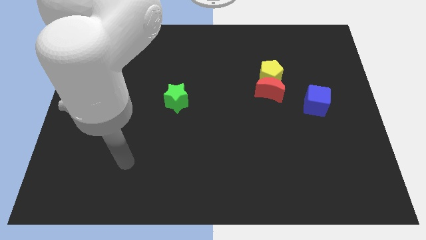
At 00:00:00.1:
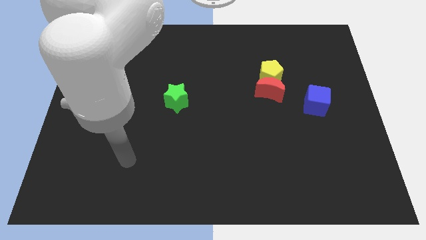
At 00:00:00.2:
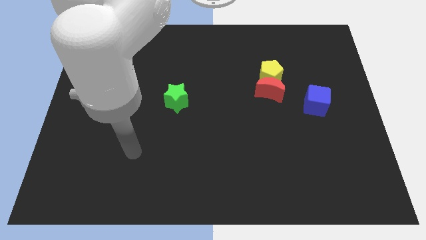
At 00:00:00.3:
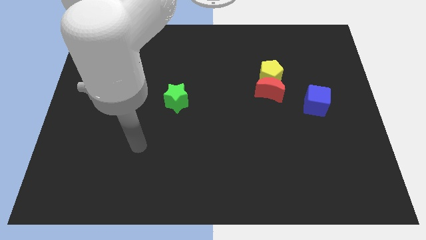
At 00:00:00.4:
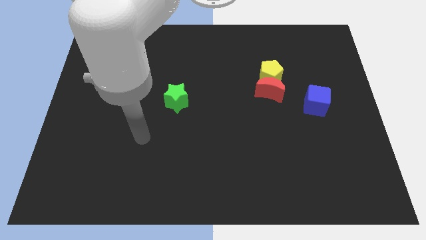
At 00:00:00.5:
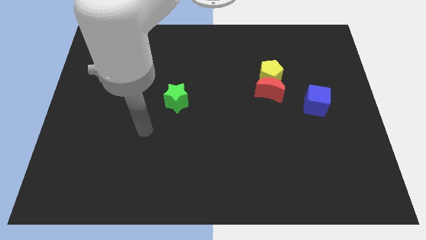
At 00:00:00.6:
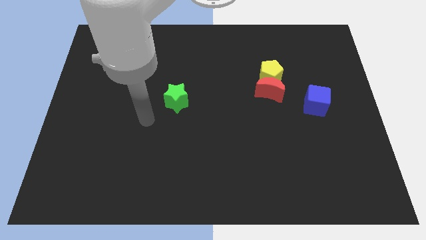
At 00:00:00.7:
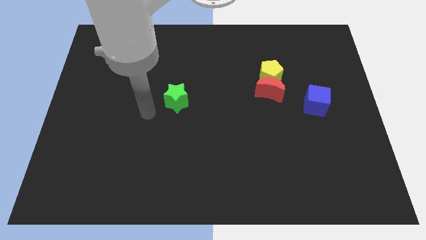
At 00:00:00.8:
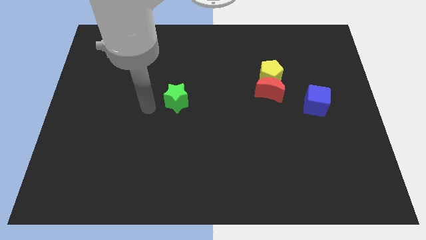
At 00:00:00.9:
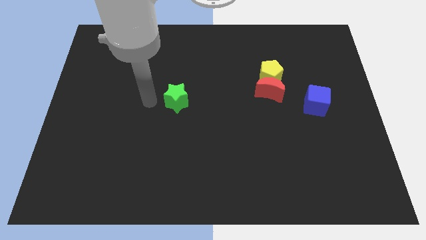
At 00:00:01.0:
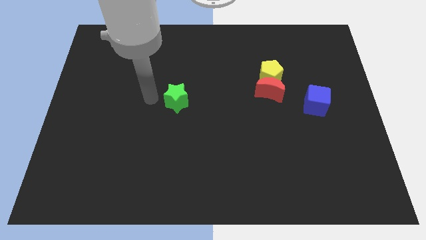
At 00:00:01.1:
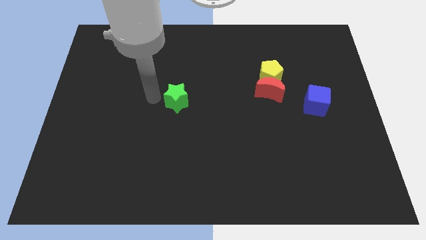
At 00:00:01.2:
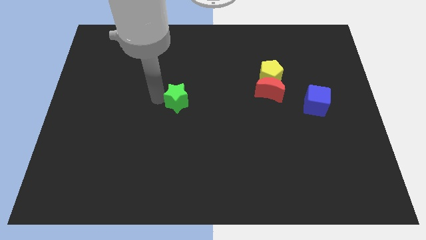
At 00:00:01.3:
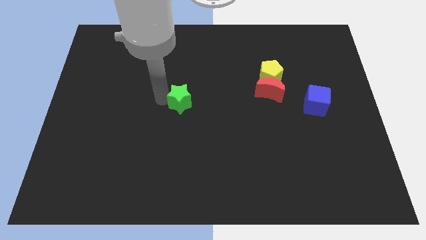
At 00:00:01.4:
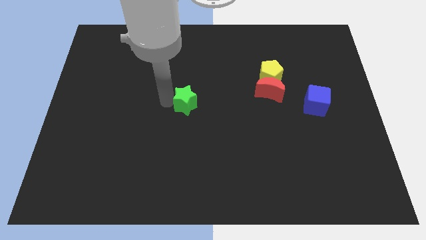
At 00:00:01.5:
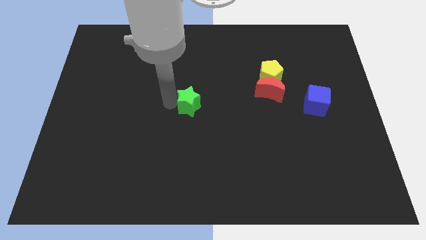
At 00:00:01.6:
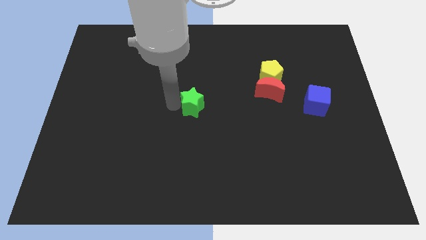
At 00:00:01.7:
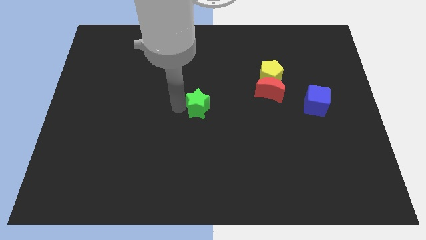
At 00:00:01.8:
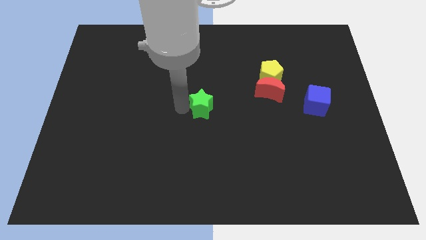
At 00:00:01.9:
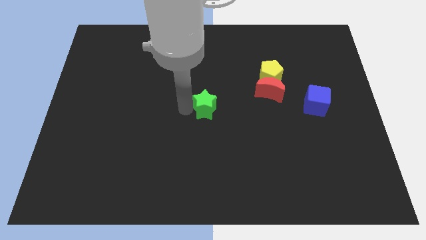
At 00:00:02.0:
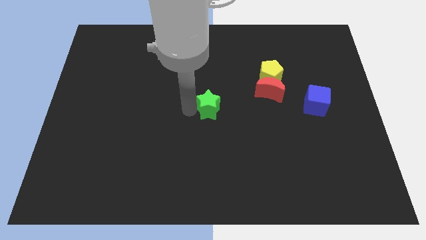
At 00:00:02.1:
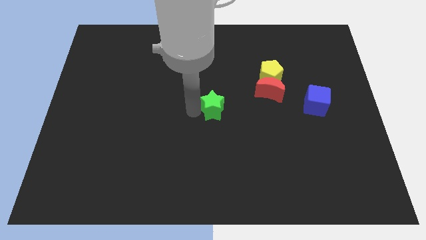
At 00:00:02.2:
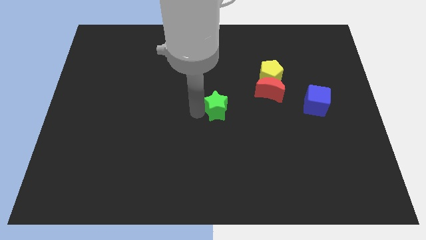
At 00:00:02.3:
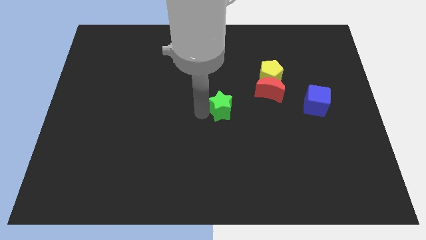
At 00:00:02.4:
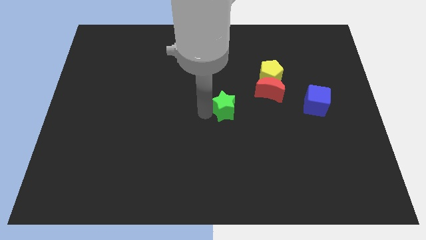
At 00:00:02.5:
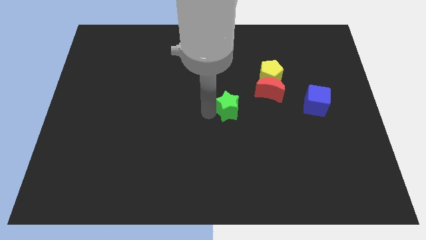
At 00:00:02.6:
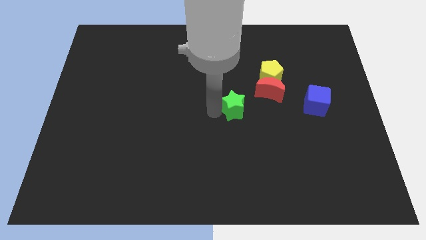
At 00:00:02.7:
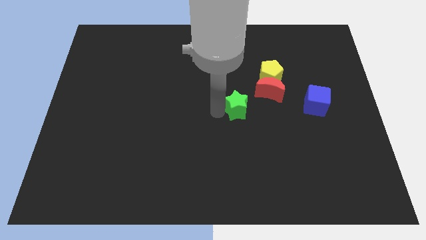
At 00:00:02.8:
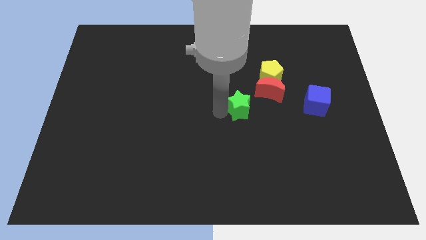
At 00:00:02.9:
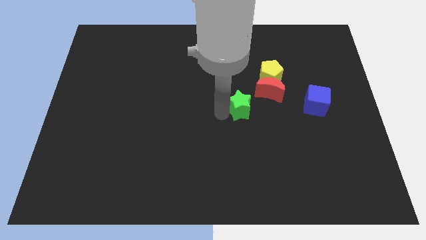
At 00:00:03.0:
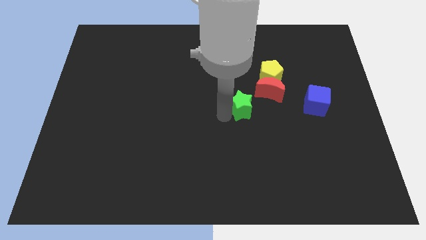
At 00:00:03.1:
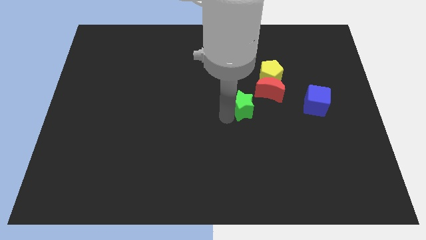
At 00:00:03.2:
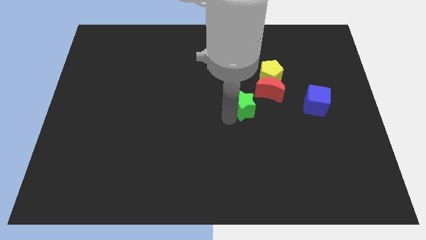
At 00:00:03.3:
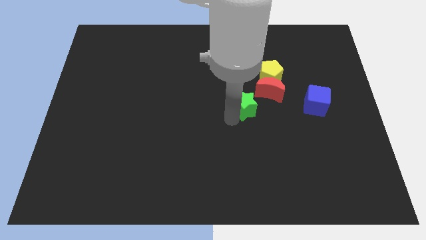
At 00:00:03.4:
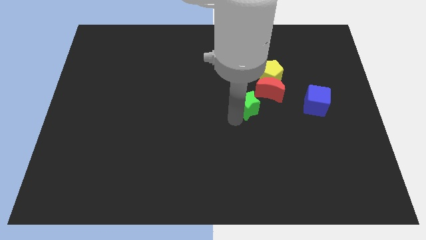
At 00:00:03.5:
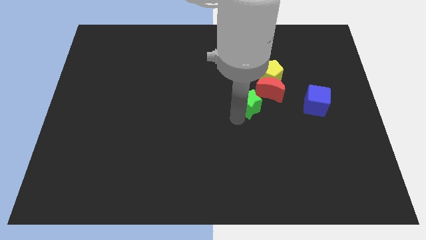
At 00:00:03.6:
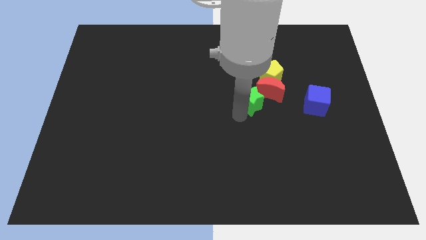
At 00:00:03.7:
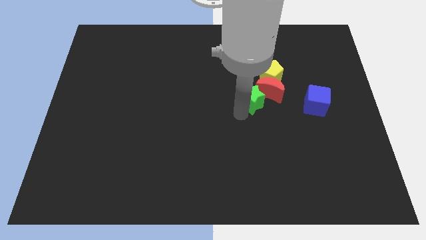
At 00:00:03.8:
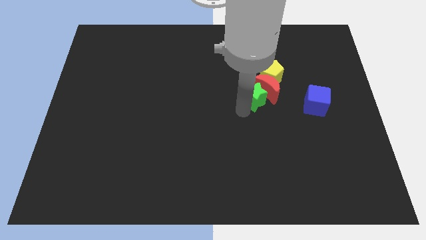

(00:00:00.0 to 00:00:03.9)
slide the green star towards the red block

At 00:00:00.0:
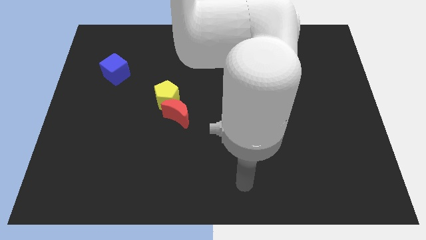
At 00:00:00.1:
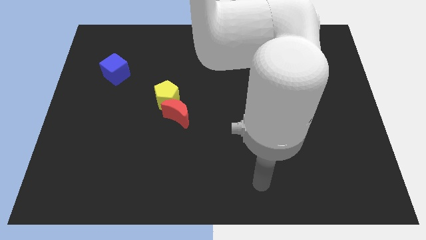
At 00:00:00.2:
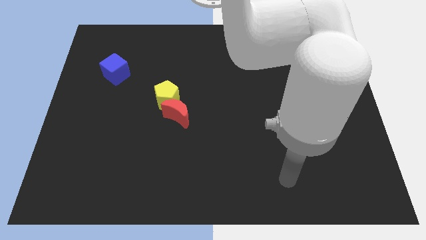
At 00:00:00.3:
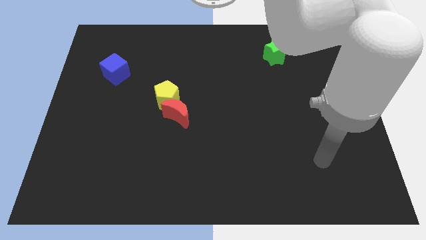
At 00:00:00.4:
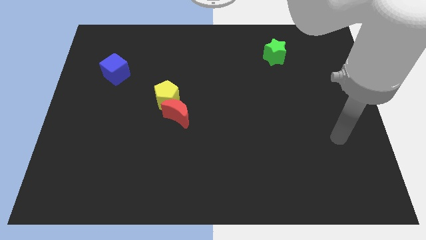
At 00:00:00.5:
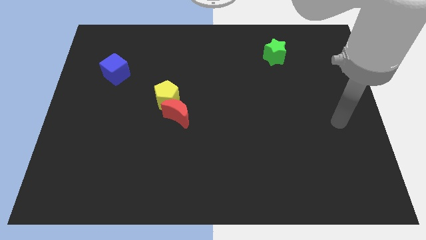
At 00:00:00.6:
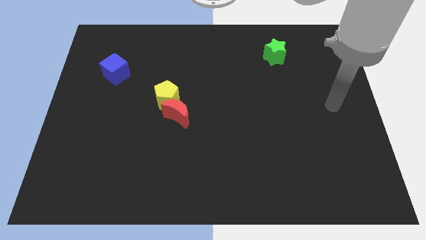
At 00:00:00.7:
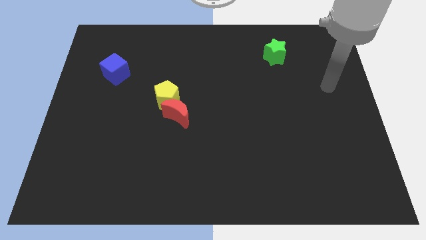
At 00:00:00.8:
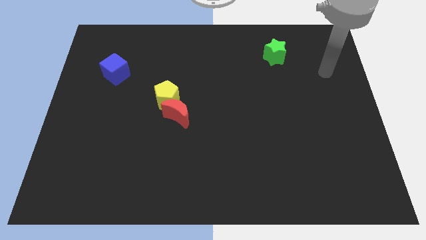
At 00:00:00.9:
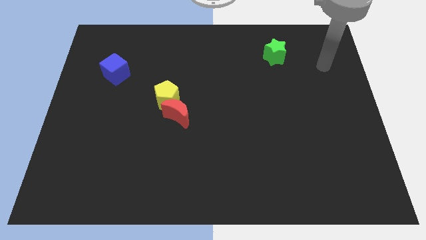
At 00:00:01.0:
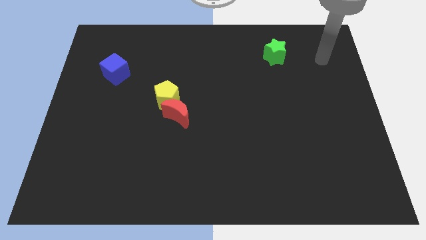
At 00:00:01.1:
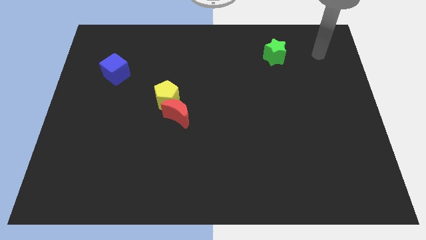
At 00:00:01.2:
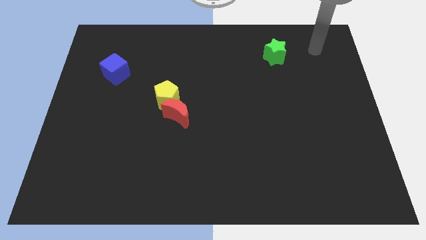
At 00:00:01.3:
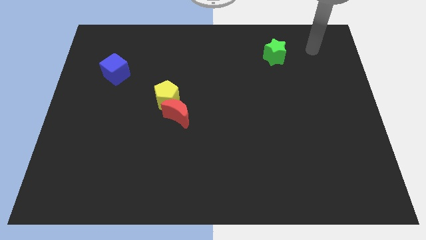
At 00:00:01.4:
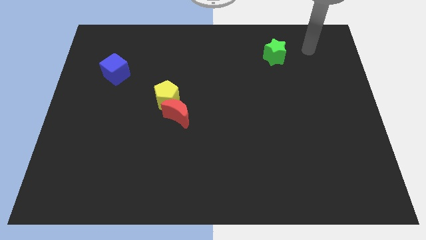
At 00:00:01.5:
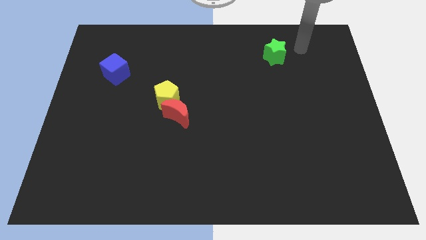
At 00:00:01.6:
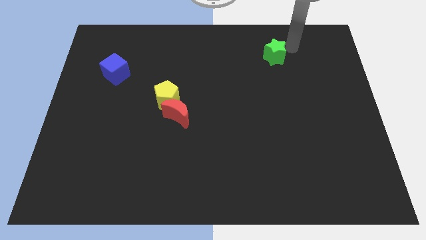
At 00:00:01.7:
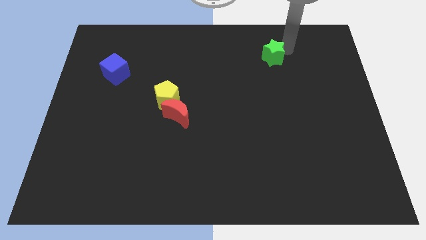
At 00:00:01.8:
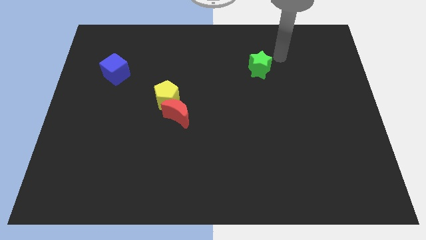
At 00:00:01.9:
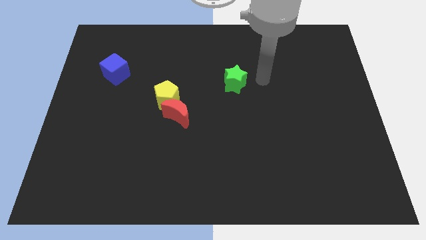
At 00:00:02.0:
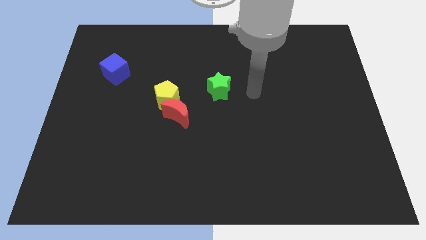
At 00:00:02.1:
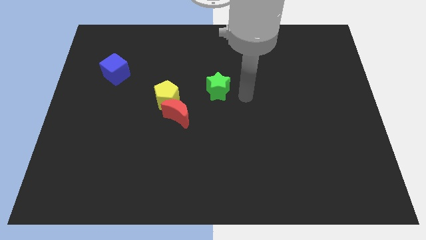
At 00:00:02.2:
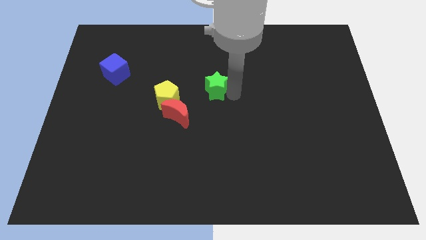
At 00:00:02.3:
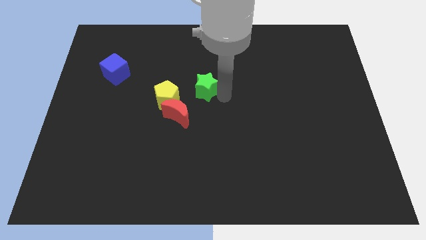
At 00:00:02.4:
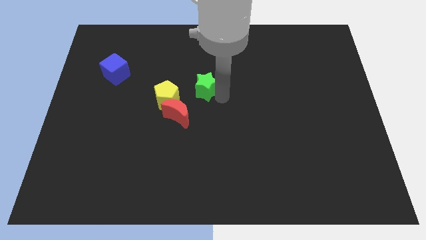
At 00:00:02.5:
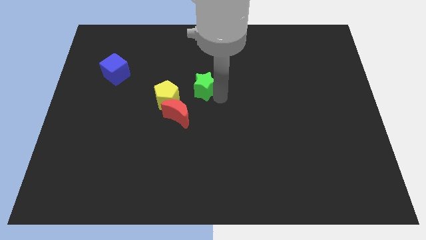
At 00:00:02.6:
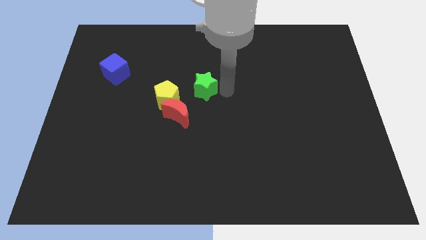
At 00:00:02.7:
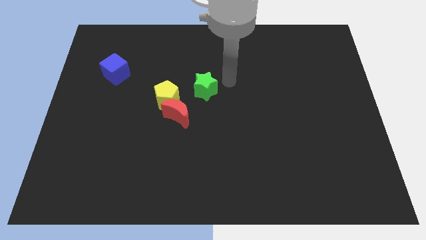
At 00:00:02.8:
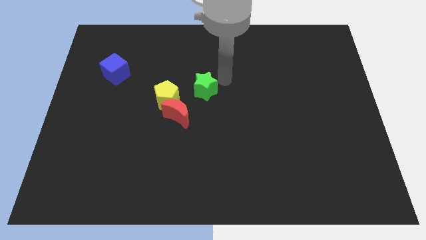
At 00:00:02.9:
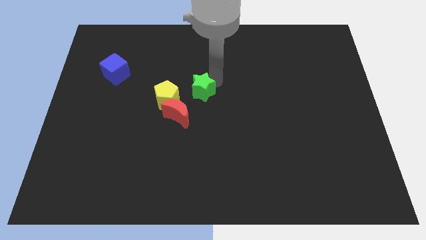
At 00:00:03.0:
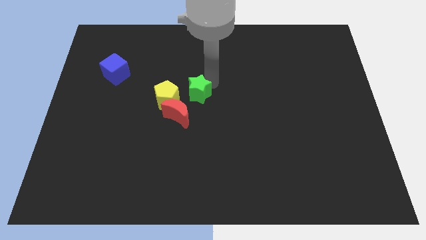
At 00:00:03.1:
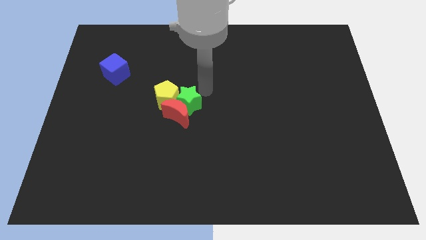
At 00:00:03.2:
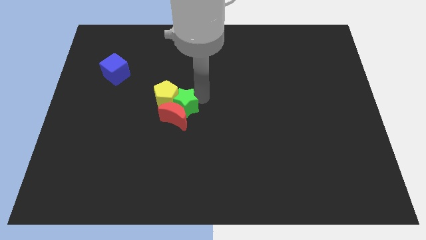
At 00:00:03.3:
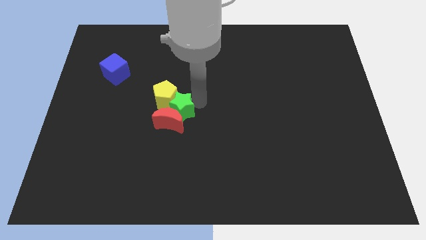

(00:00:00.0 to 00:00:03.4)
move the green star close to the red block

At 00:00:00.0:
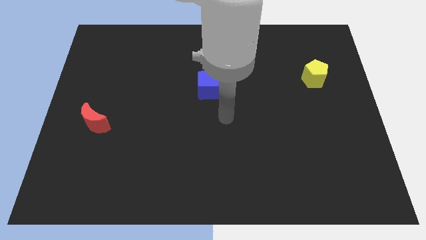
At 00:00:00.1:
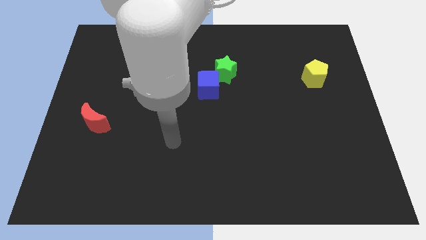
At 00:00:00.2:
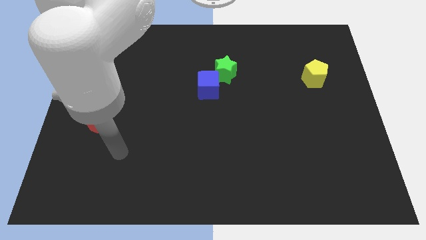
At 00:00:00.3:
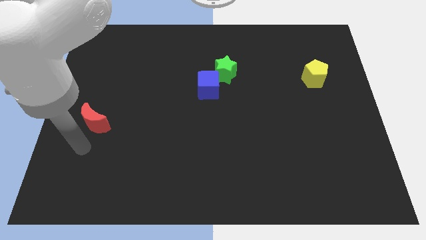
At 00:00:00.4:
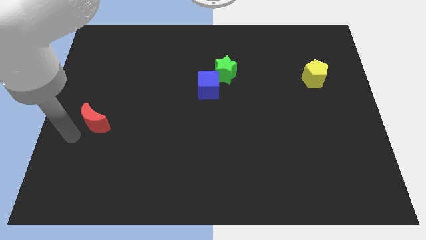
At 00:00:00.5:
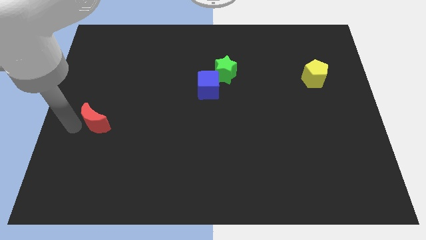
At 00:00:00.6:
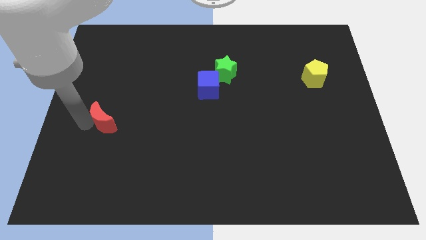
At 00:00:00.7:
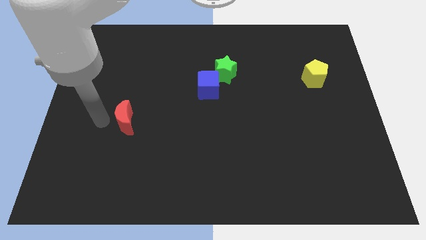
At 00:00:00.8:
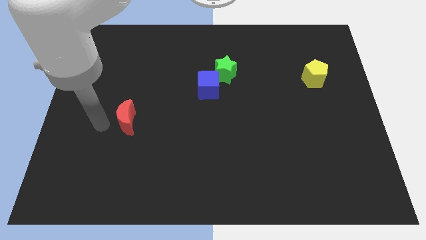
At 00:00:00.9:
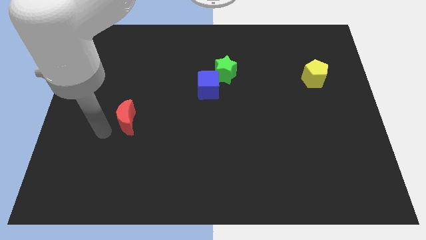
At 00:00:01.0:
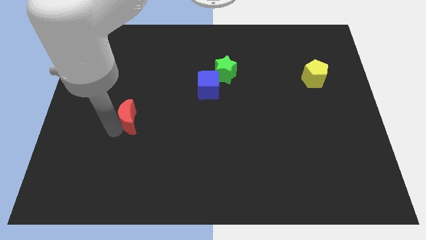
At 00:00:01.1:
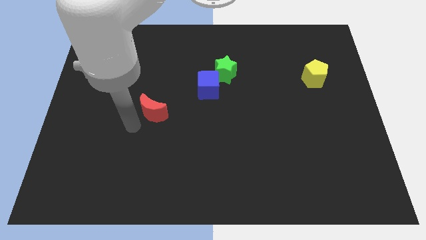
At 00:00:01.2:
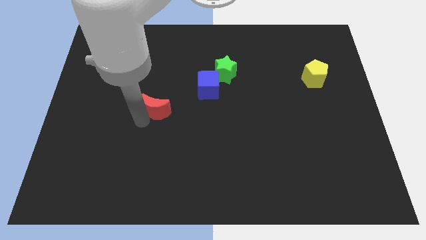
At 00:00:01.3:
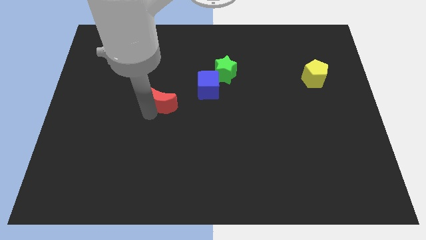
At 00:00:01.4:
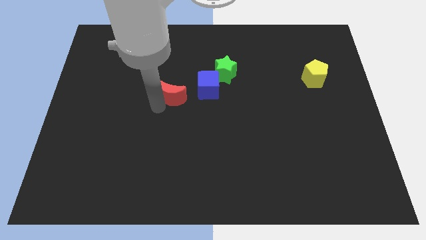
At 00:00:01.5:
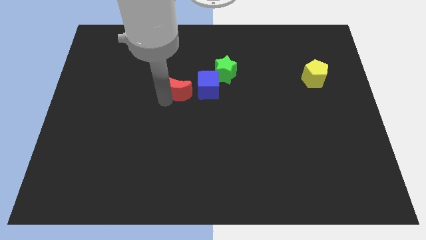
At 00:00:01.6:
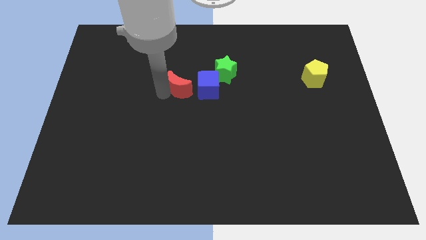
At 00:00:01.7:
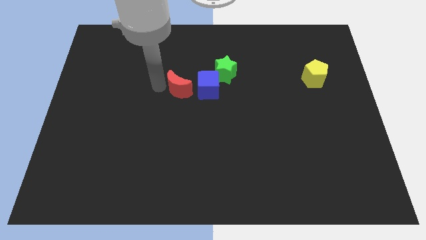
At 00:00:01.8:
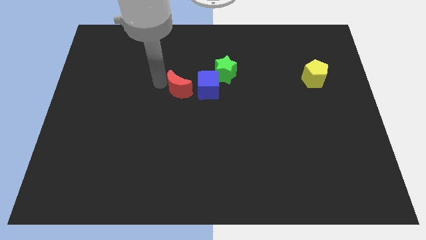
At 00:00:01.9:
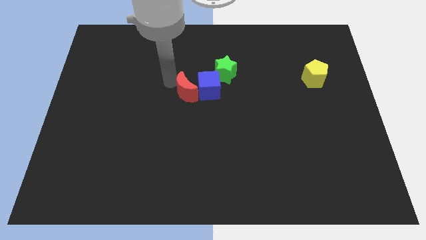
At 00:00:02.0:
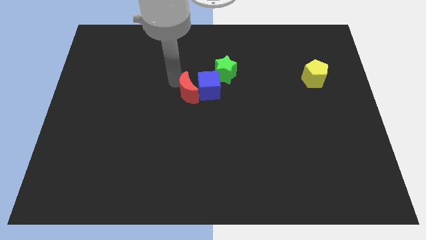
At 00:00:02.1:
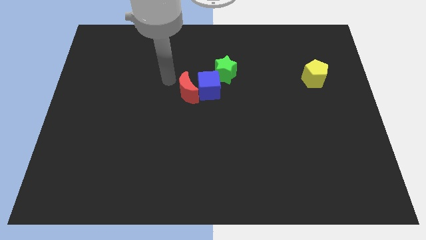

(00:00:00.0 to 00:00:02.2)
put the red moon towards the blue cube
